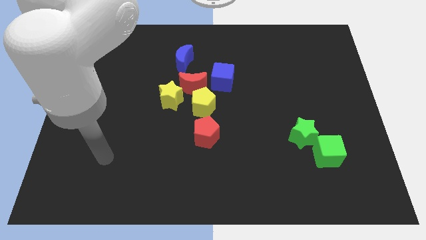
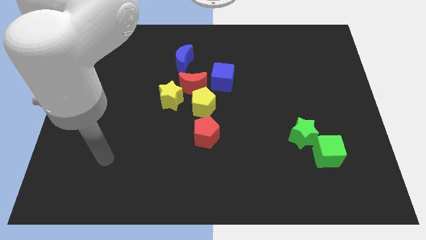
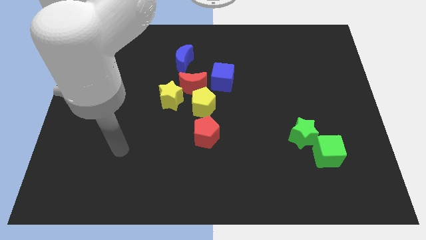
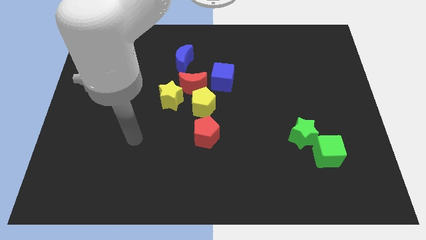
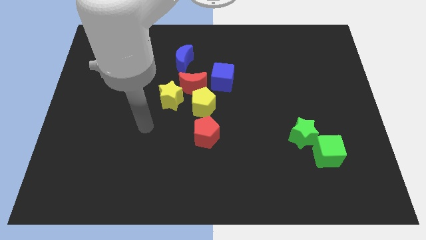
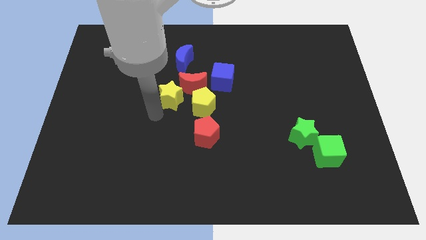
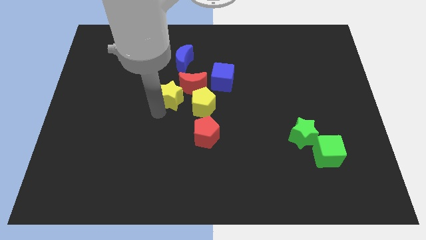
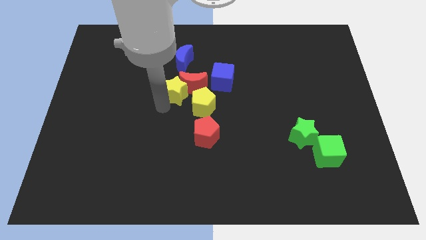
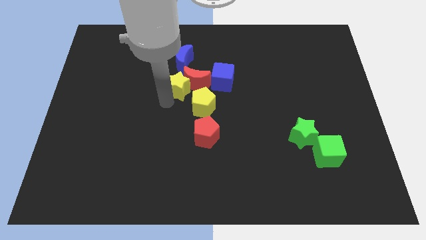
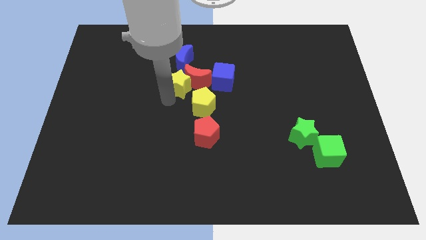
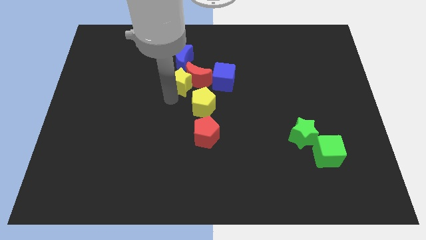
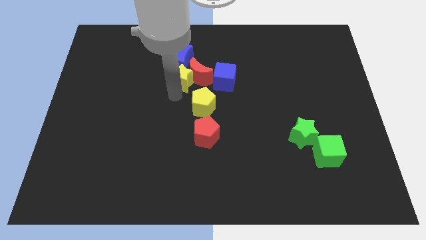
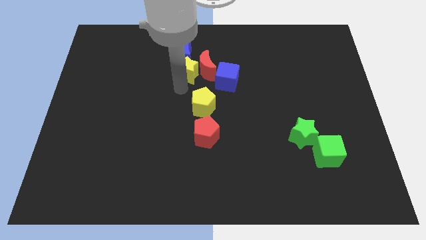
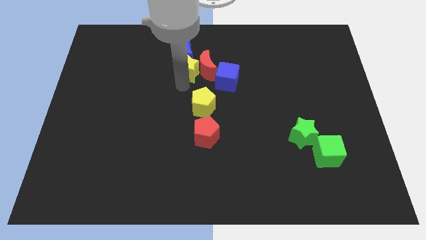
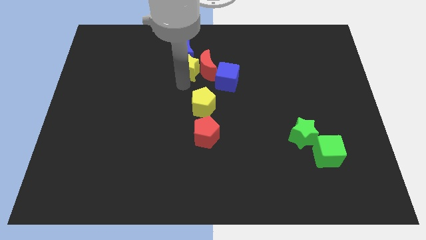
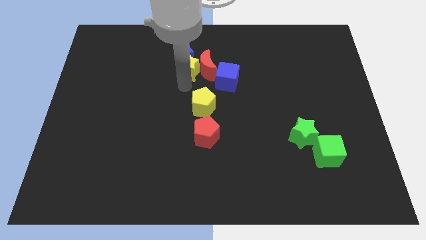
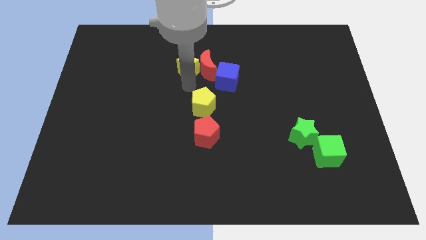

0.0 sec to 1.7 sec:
move the yellow star to the left of the red crescent

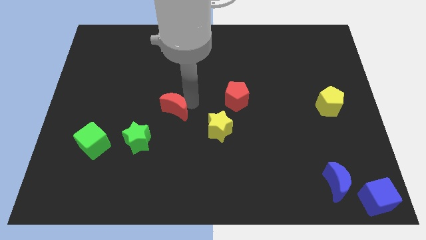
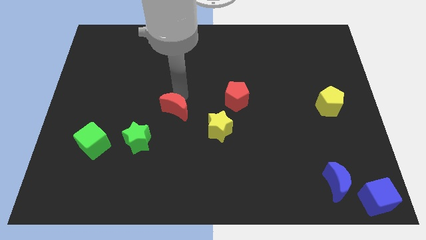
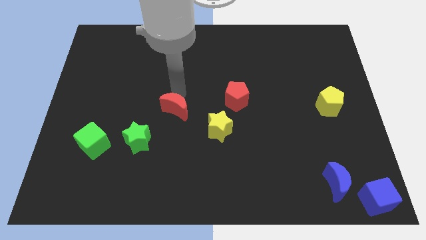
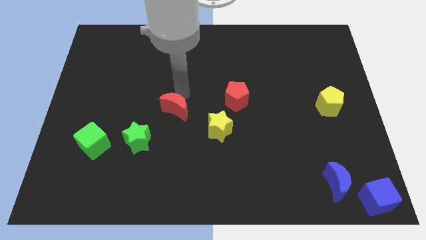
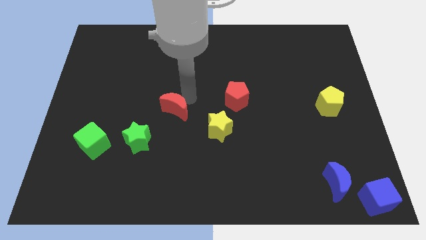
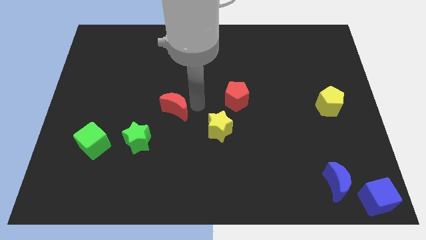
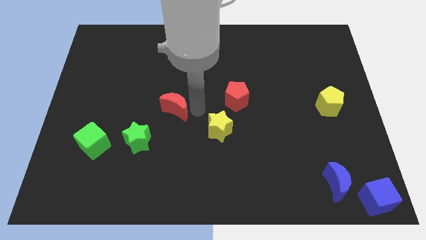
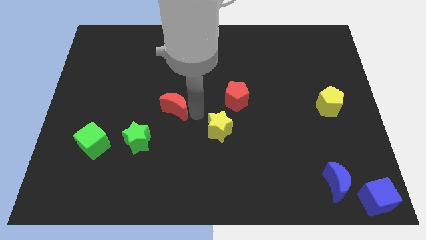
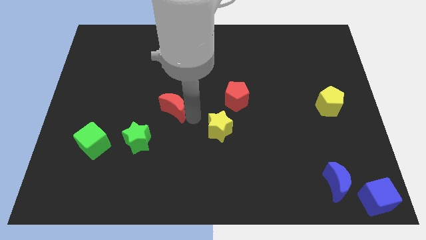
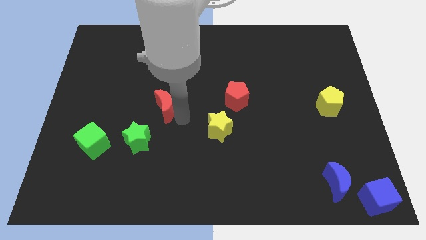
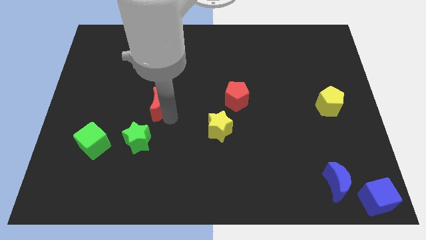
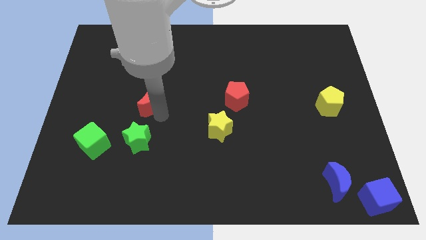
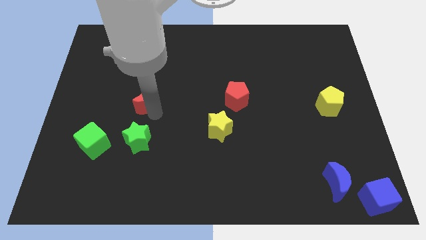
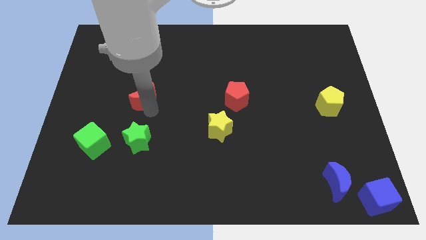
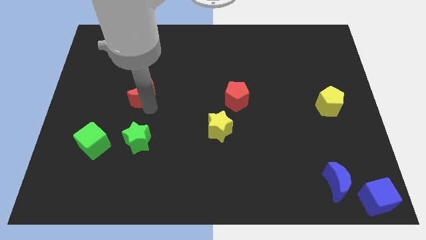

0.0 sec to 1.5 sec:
move the red moon above the green star

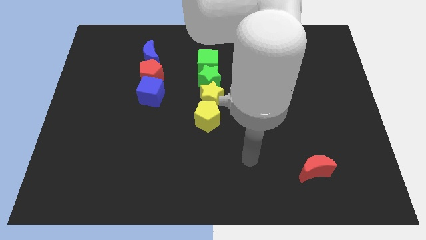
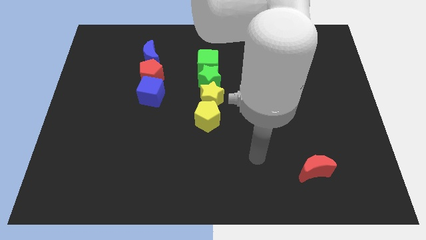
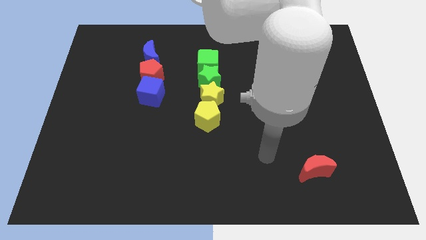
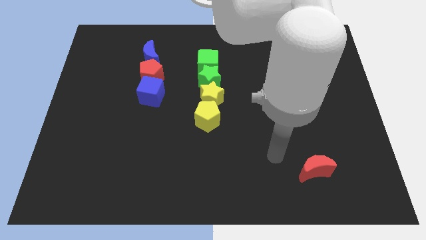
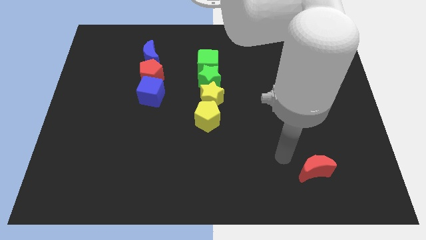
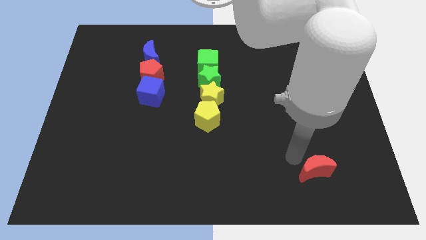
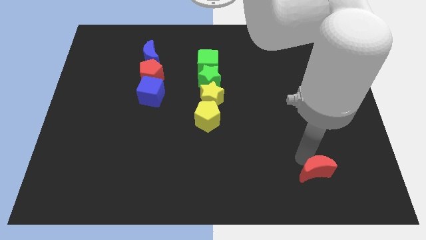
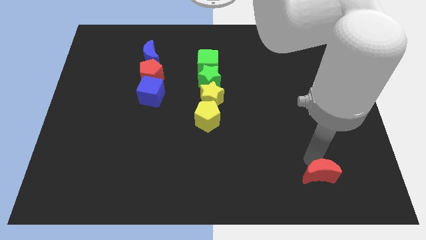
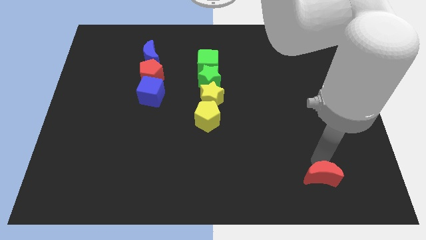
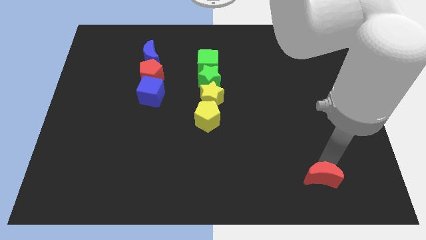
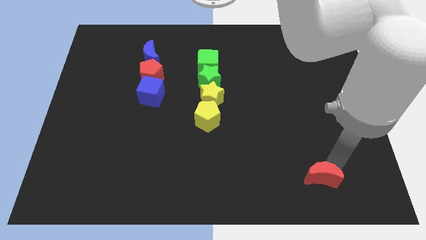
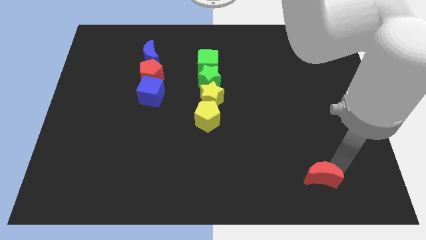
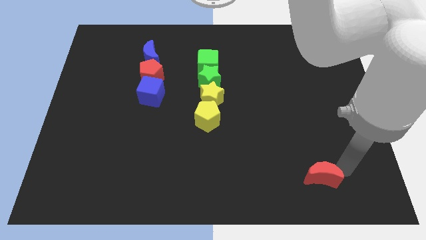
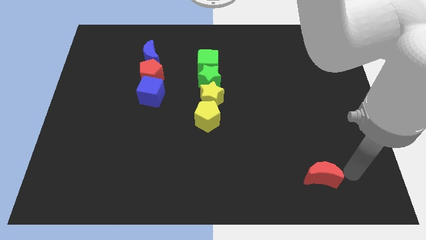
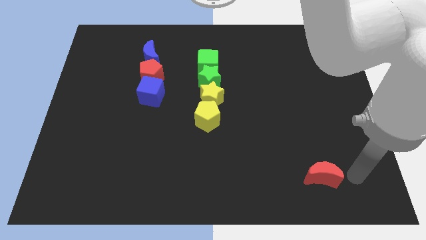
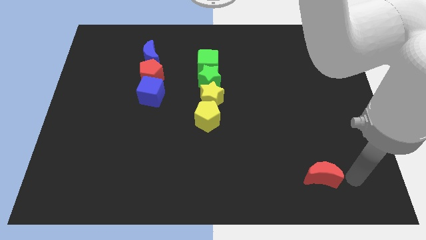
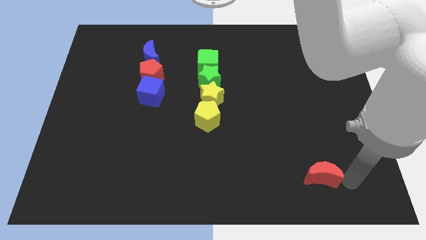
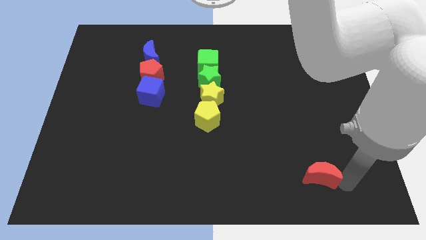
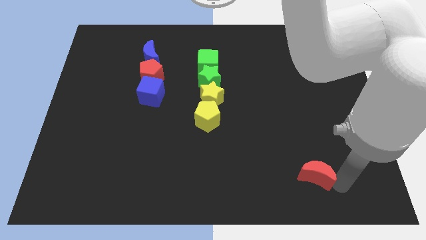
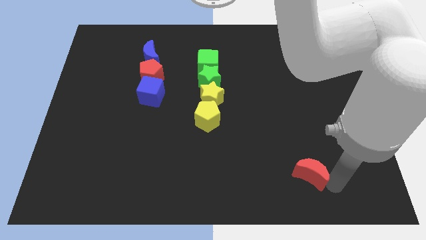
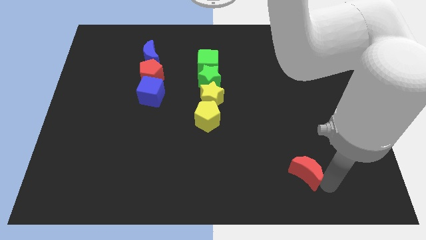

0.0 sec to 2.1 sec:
slightly adjust the red crescent to right

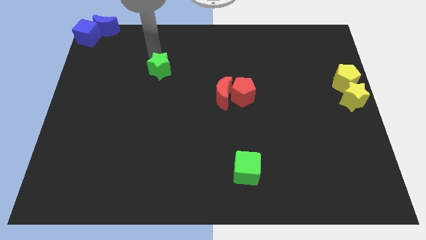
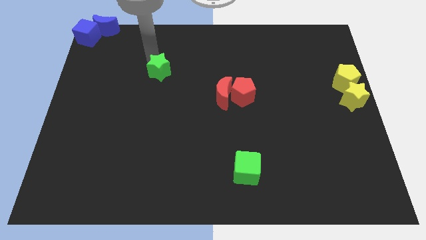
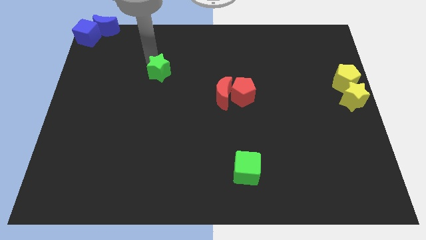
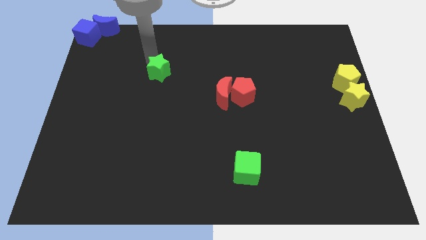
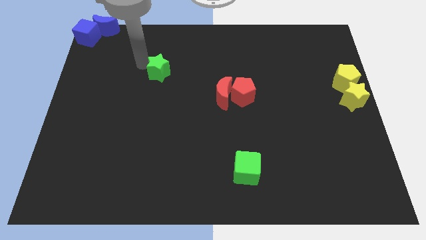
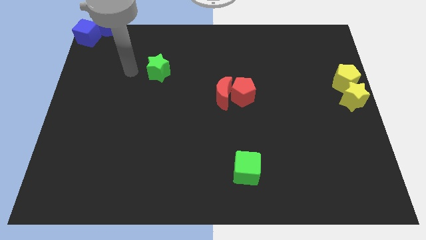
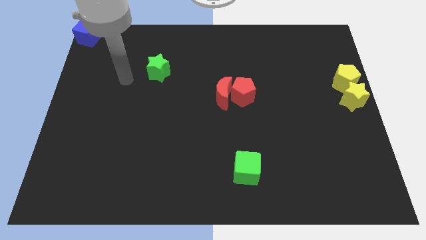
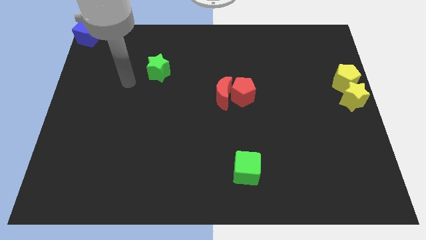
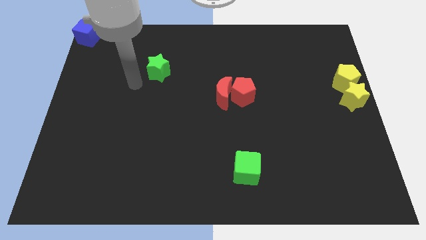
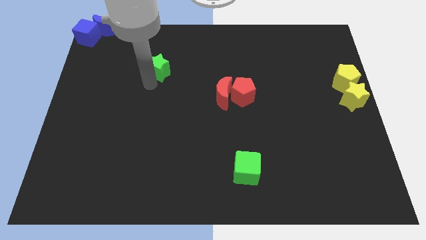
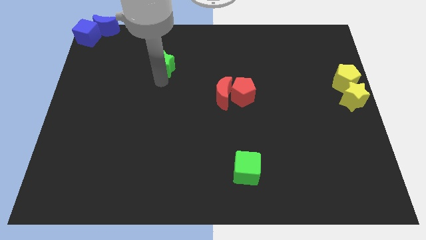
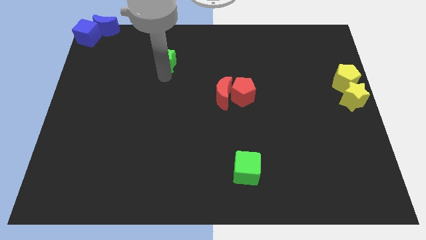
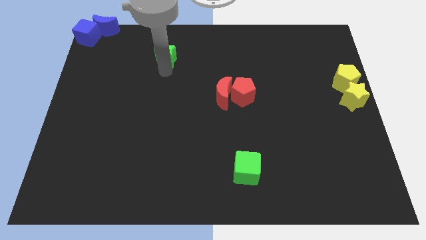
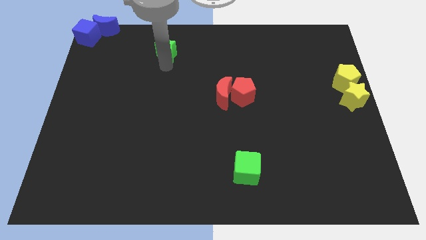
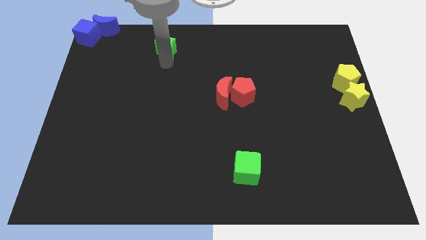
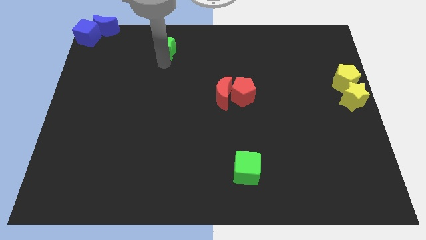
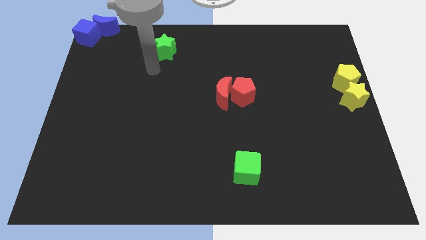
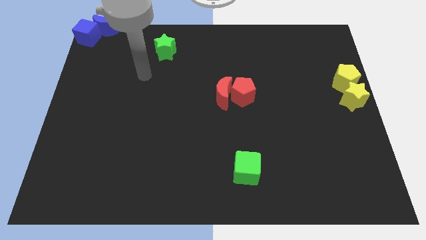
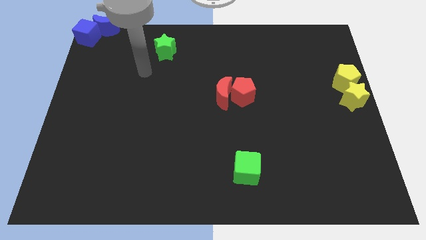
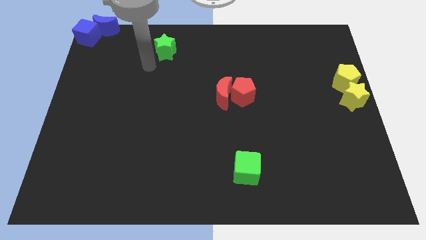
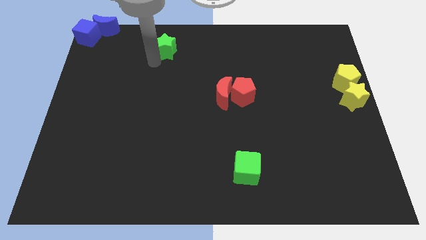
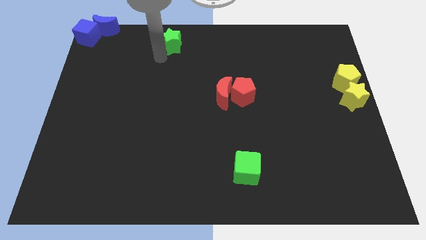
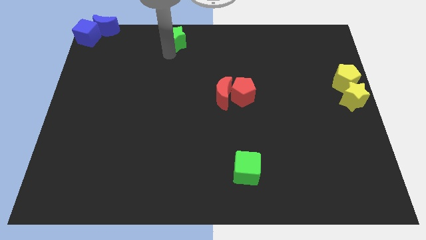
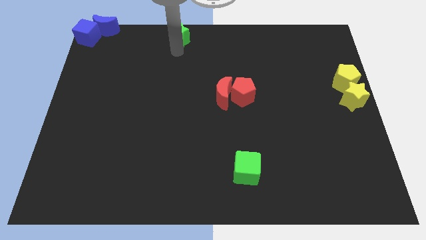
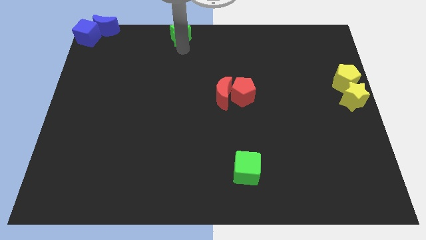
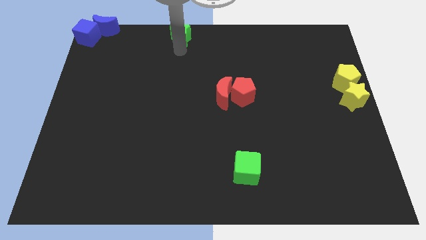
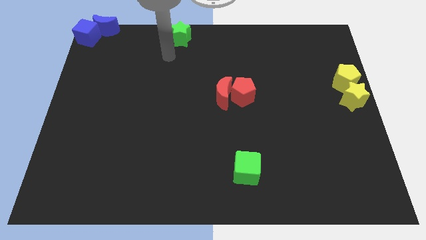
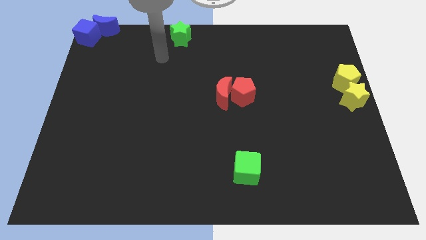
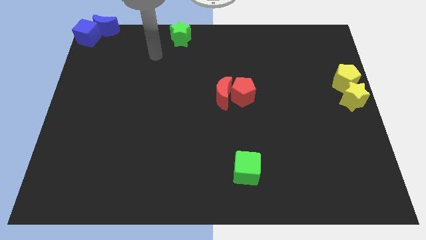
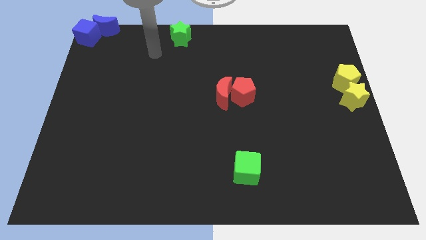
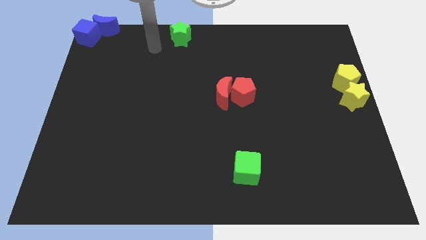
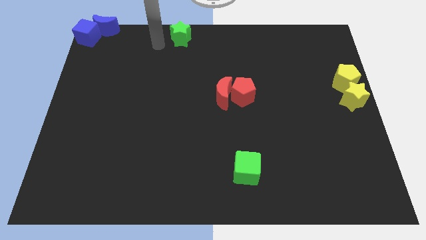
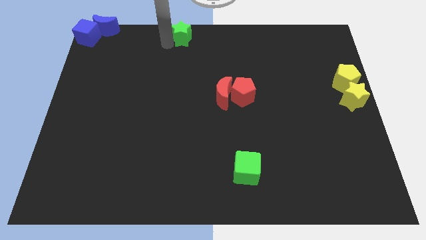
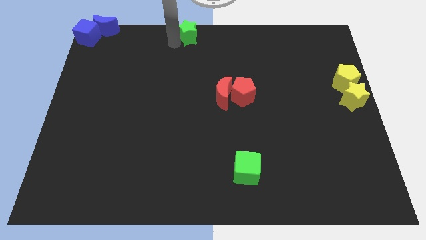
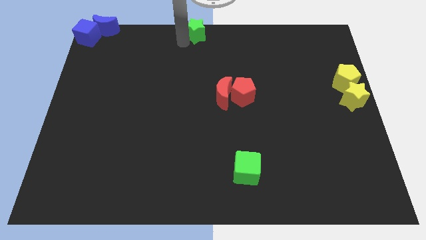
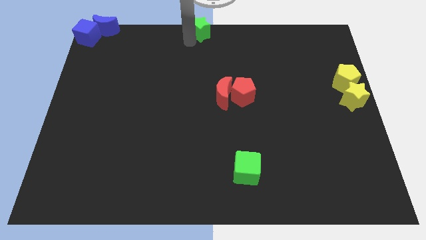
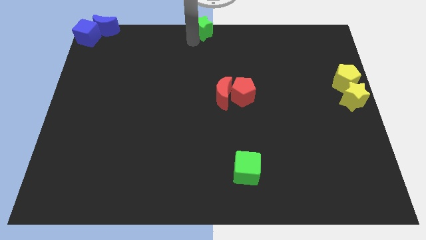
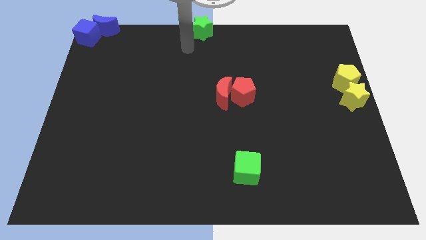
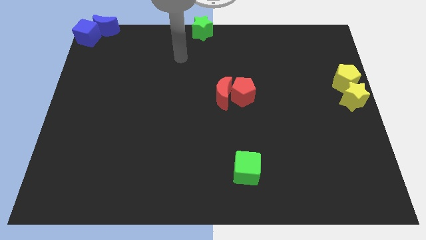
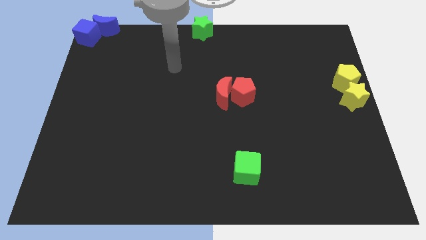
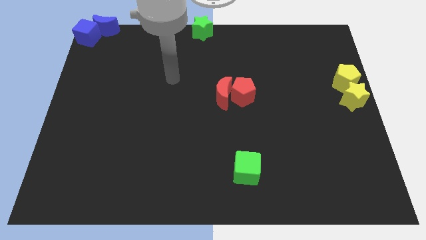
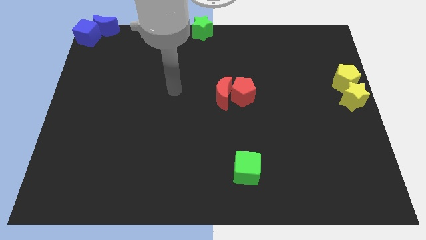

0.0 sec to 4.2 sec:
move the green star to the top of the board
